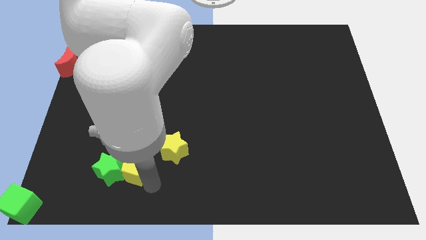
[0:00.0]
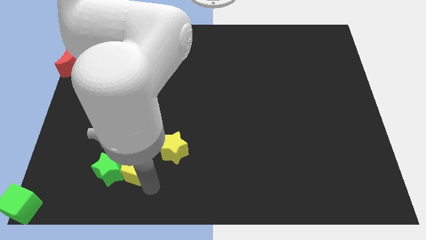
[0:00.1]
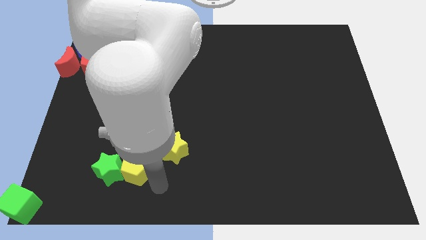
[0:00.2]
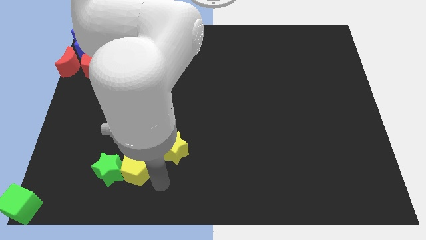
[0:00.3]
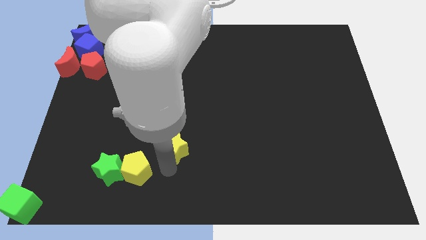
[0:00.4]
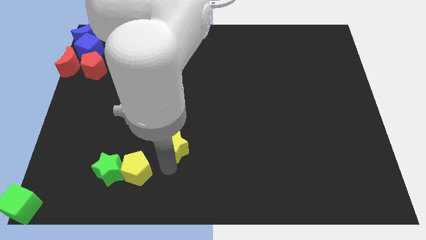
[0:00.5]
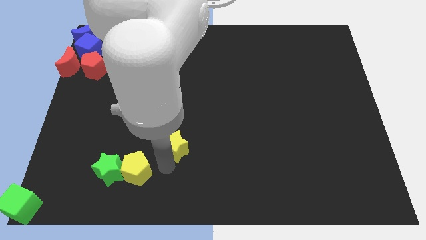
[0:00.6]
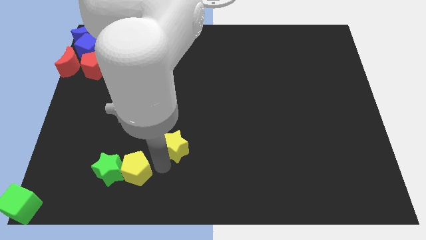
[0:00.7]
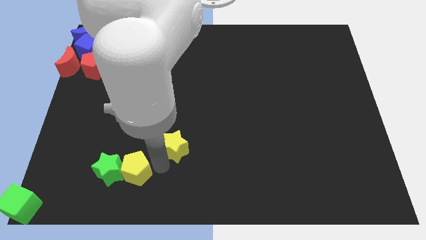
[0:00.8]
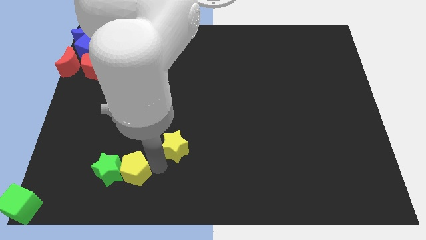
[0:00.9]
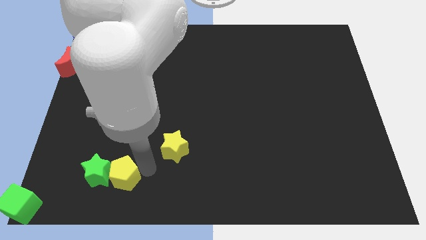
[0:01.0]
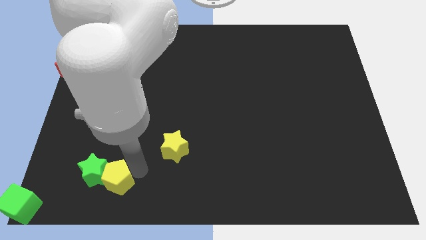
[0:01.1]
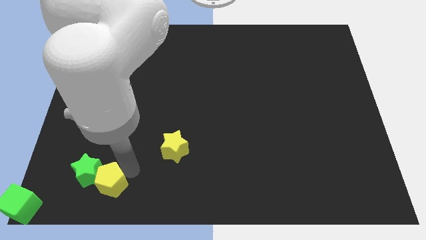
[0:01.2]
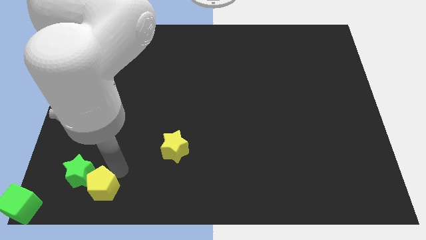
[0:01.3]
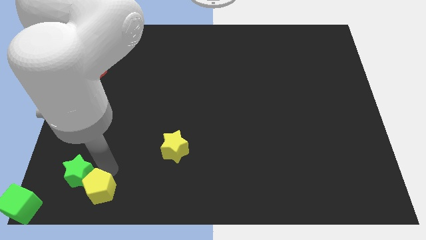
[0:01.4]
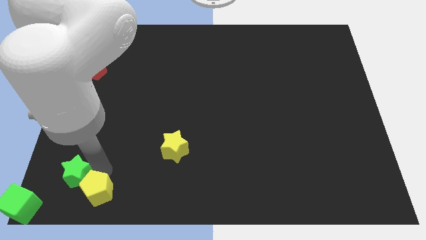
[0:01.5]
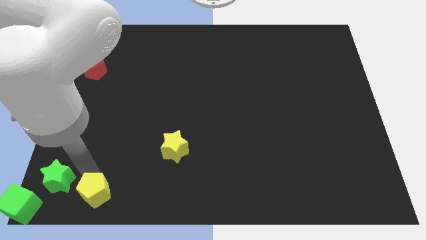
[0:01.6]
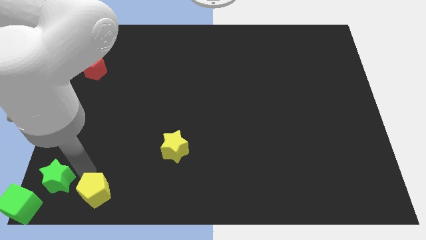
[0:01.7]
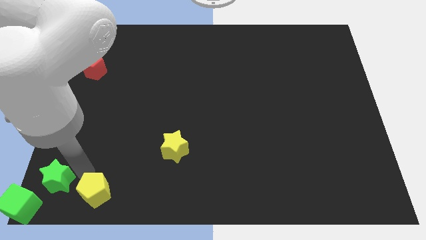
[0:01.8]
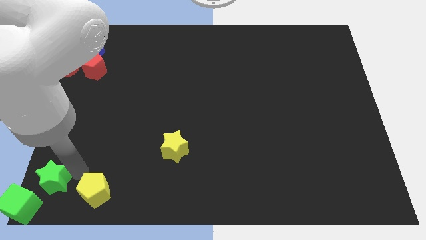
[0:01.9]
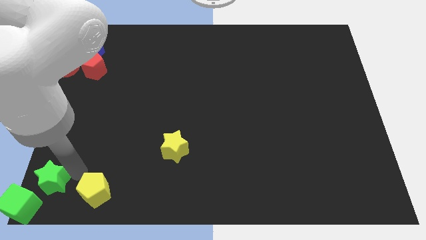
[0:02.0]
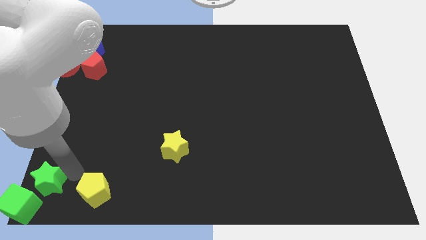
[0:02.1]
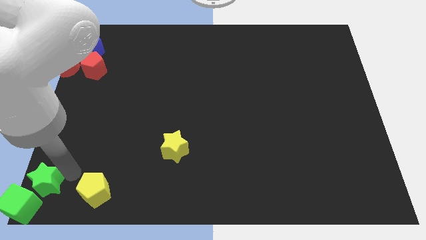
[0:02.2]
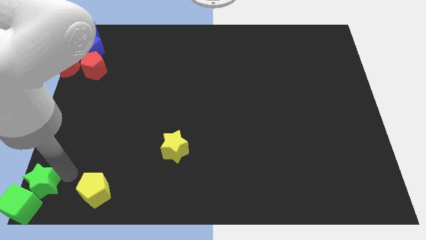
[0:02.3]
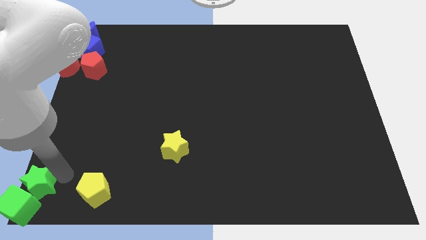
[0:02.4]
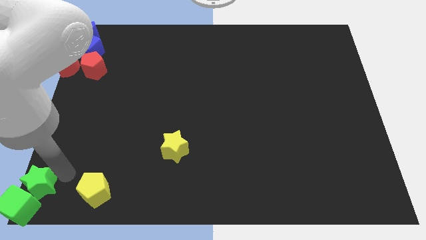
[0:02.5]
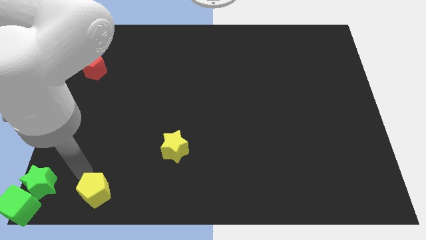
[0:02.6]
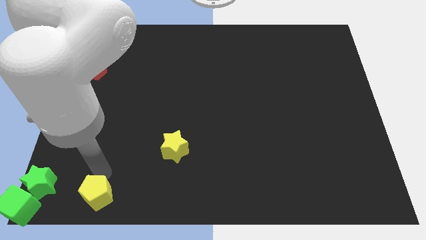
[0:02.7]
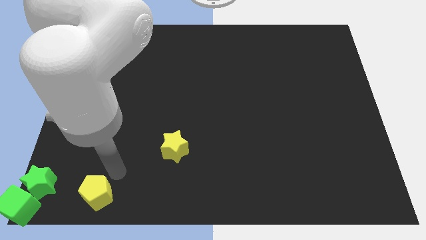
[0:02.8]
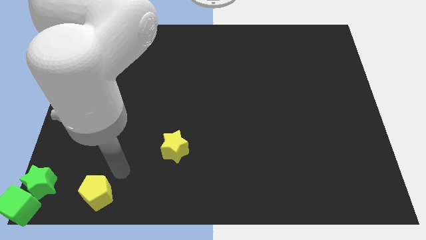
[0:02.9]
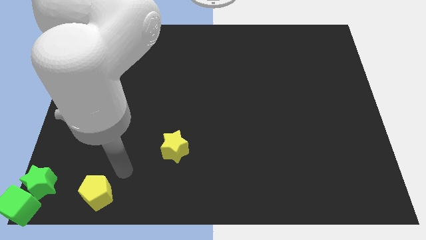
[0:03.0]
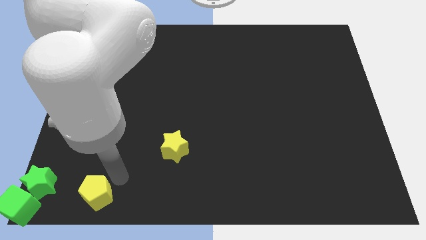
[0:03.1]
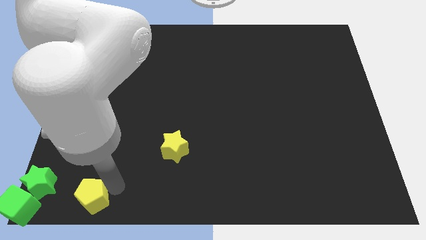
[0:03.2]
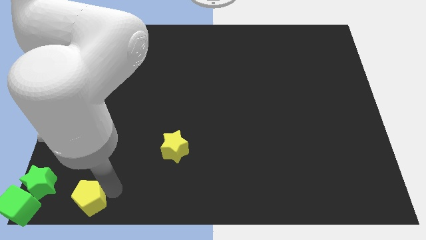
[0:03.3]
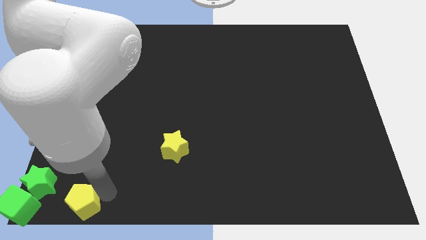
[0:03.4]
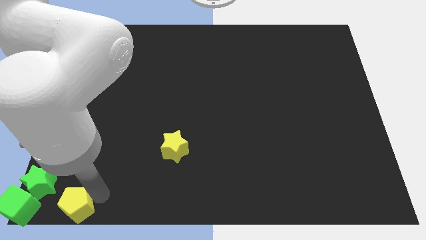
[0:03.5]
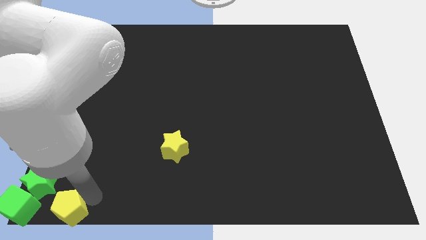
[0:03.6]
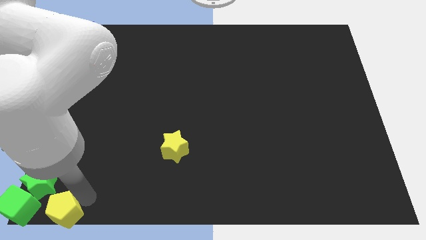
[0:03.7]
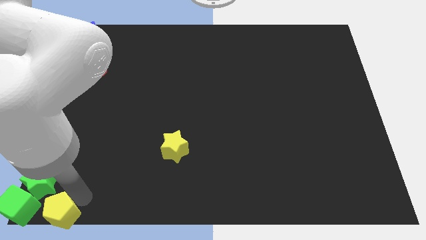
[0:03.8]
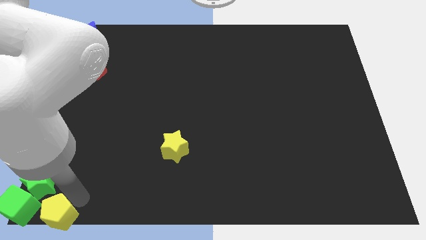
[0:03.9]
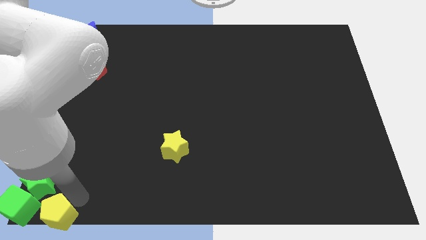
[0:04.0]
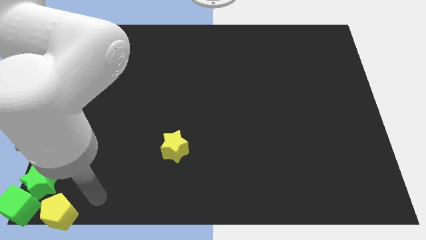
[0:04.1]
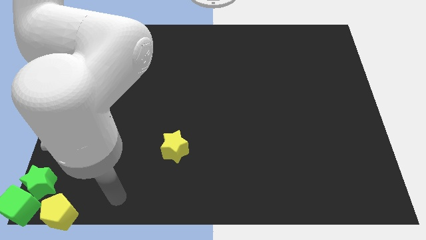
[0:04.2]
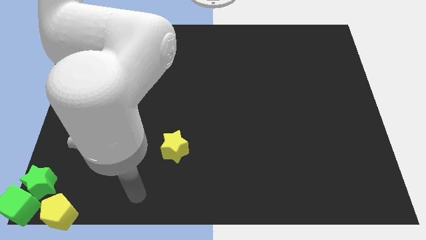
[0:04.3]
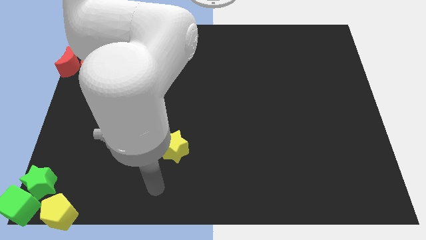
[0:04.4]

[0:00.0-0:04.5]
slide the yellow pentagon and the green star towards the left corner of the board

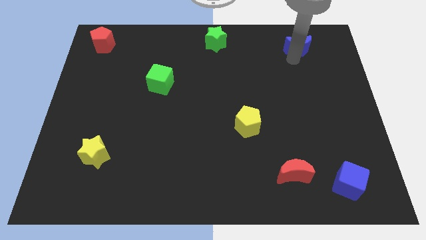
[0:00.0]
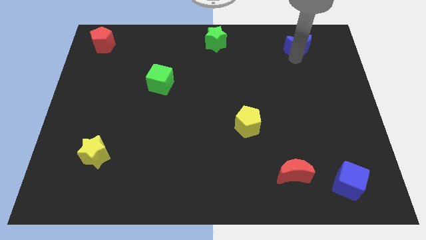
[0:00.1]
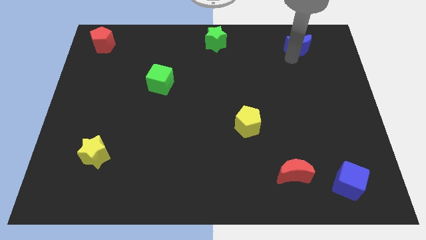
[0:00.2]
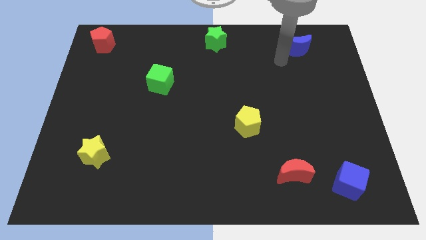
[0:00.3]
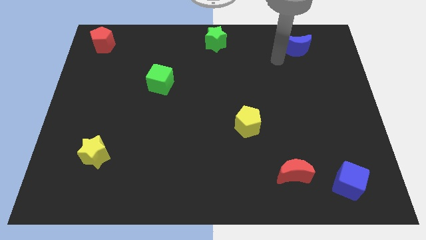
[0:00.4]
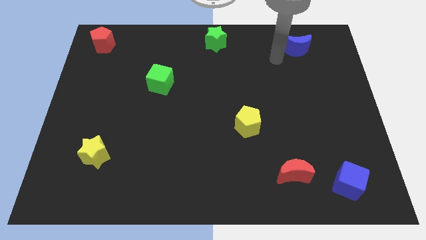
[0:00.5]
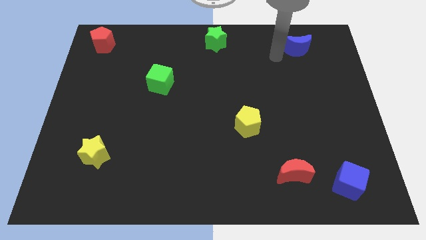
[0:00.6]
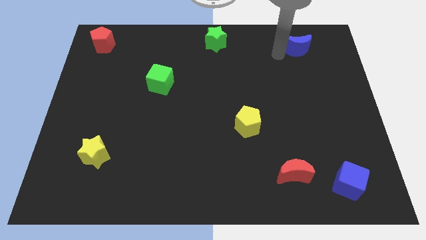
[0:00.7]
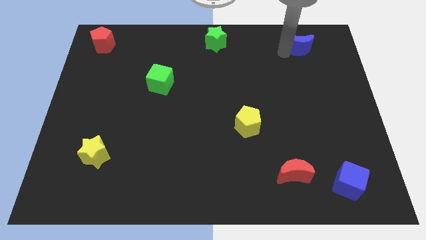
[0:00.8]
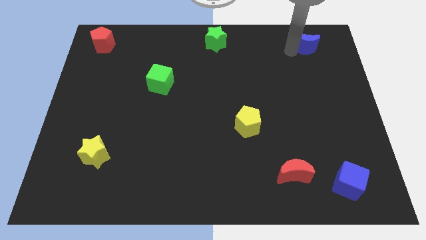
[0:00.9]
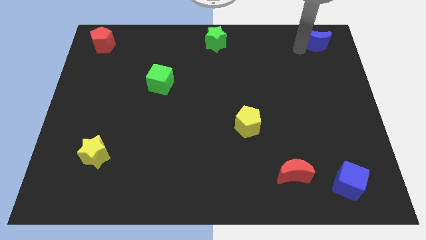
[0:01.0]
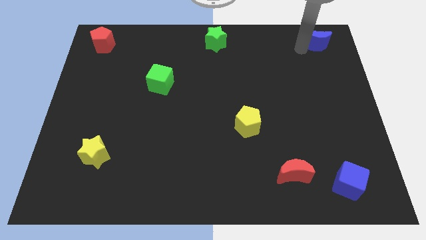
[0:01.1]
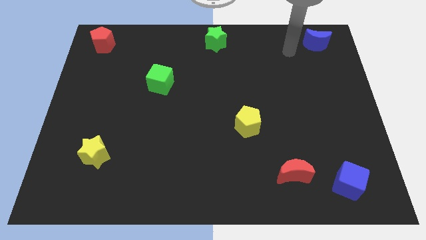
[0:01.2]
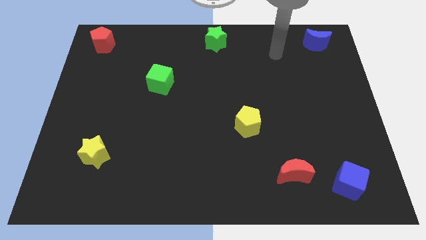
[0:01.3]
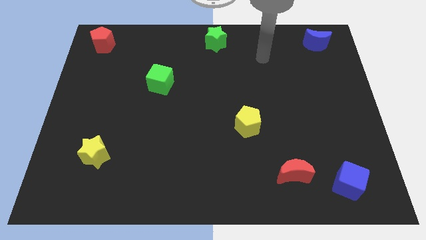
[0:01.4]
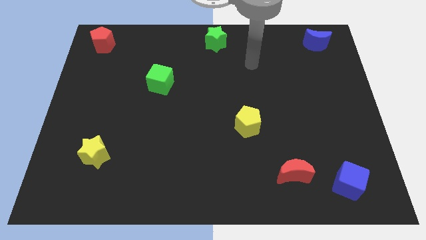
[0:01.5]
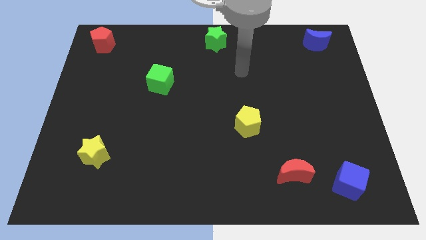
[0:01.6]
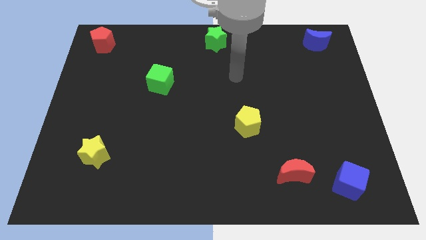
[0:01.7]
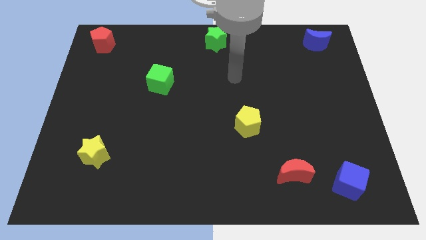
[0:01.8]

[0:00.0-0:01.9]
push the blue moon to the top right side

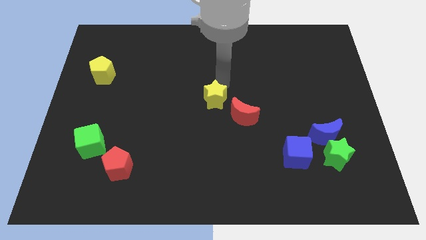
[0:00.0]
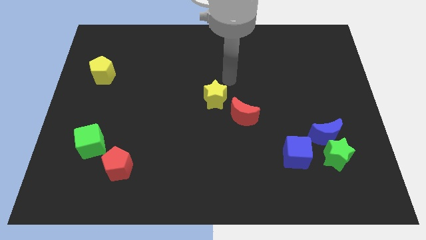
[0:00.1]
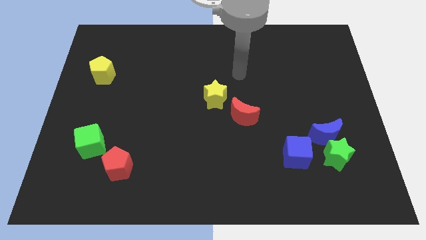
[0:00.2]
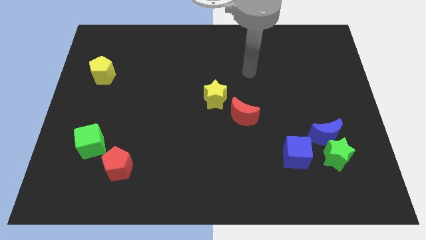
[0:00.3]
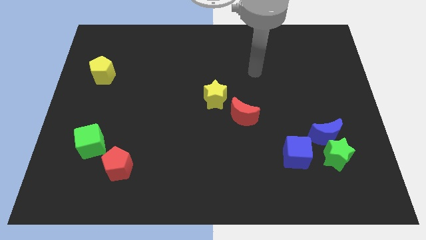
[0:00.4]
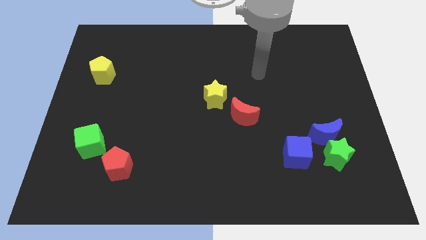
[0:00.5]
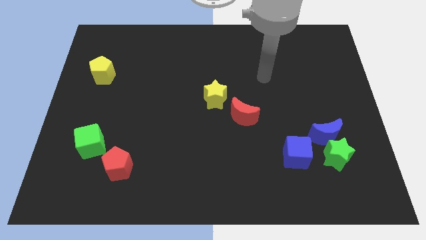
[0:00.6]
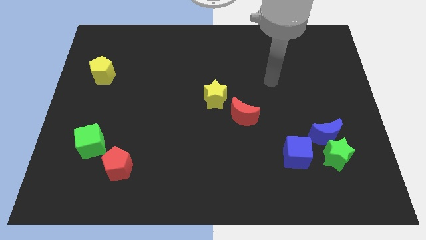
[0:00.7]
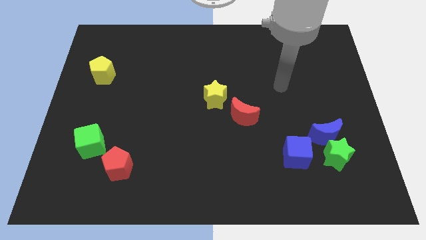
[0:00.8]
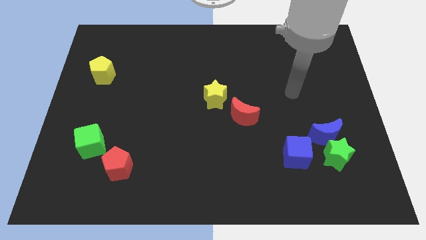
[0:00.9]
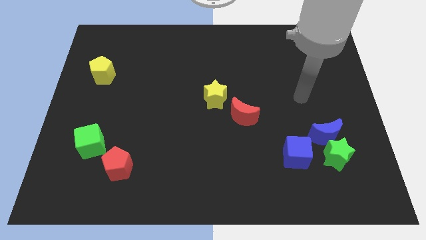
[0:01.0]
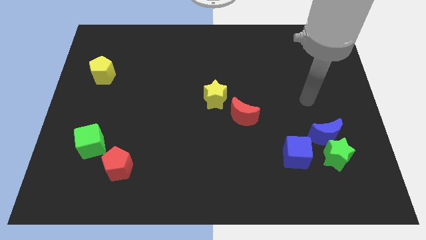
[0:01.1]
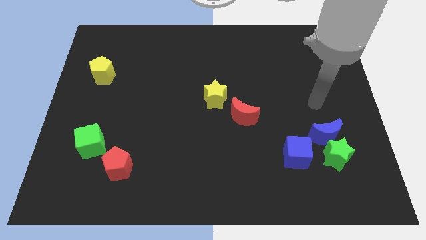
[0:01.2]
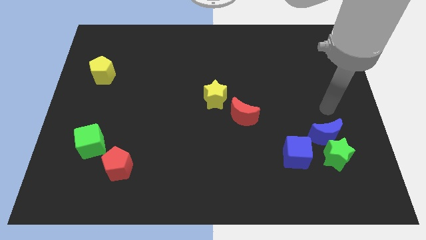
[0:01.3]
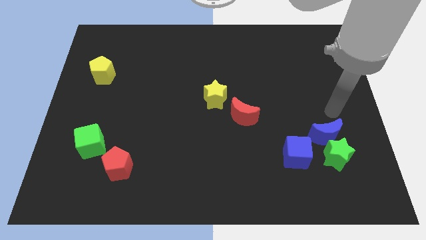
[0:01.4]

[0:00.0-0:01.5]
move your arm towards the center right side of the board

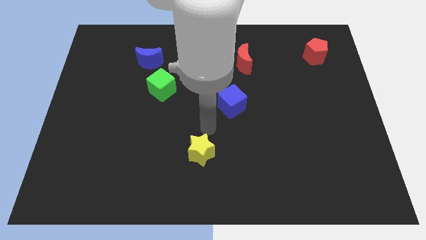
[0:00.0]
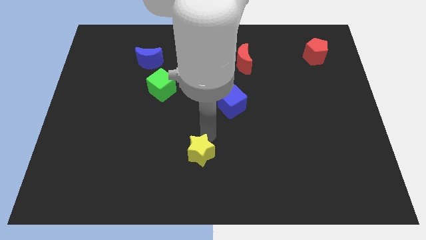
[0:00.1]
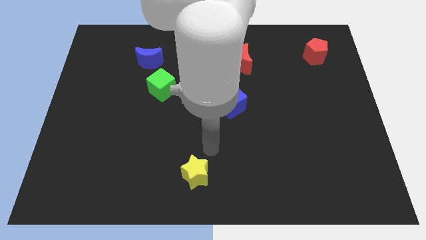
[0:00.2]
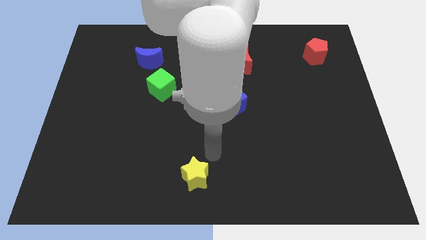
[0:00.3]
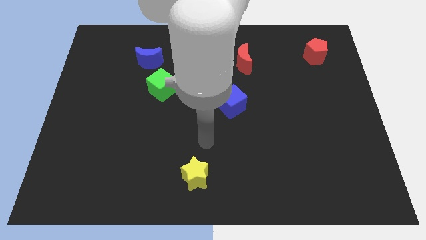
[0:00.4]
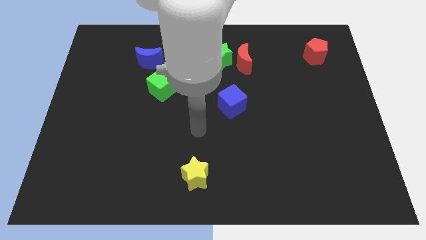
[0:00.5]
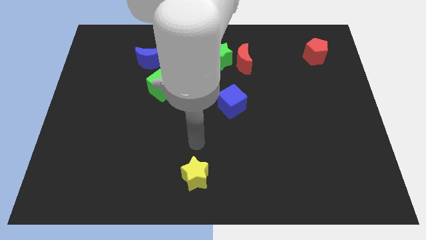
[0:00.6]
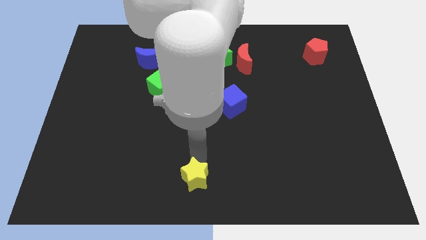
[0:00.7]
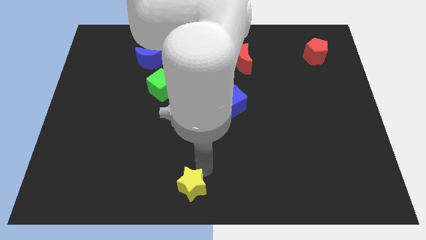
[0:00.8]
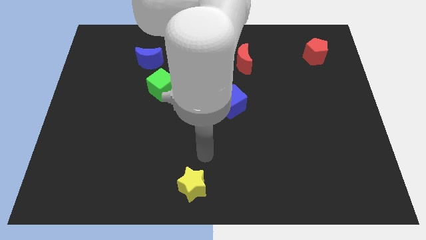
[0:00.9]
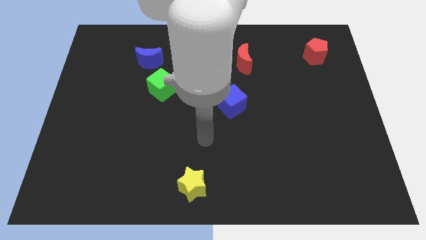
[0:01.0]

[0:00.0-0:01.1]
move the yellow star to the bottom center

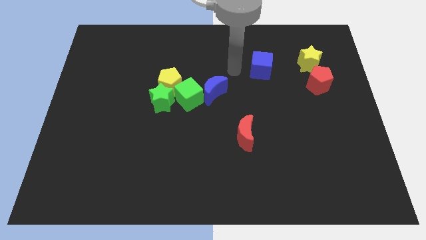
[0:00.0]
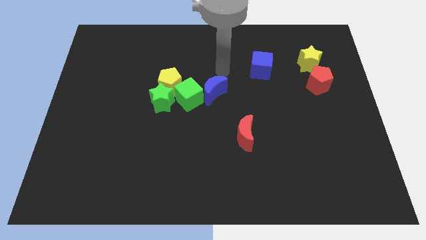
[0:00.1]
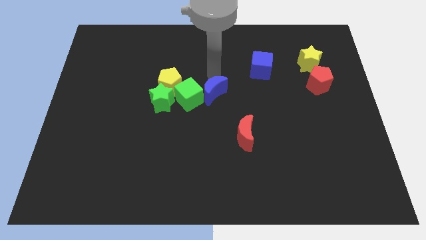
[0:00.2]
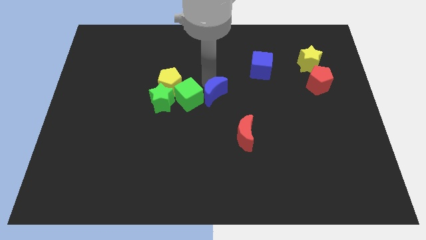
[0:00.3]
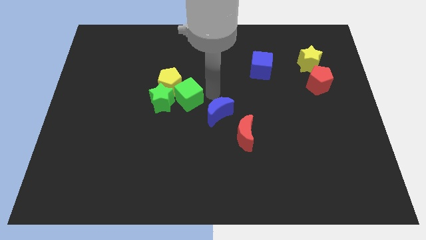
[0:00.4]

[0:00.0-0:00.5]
place the arm left to the blue moon
